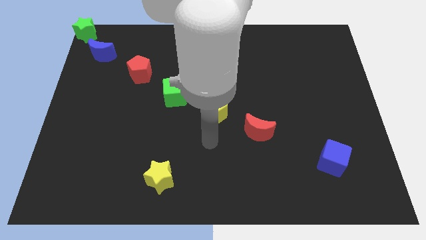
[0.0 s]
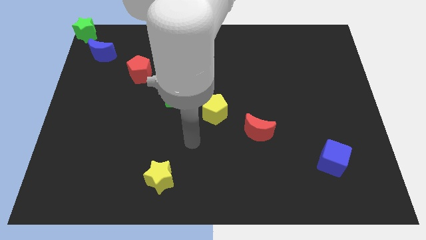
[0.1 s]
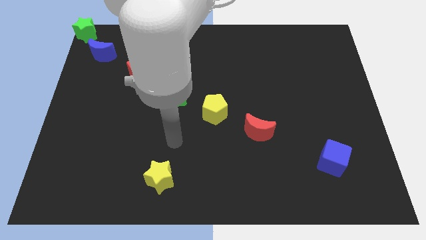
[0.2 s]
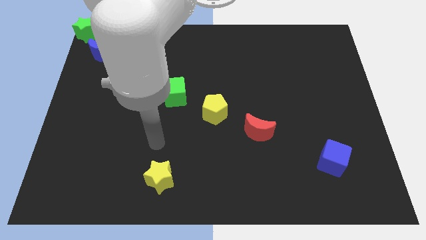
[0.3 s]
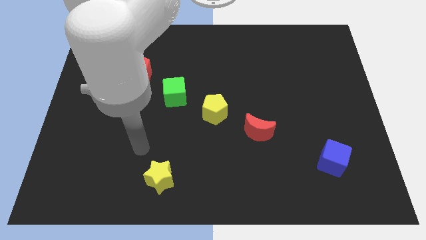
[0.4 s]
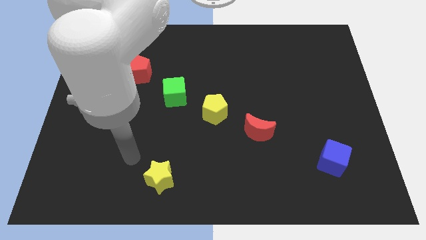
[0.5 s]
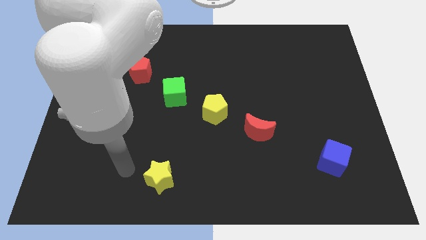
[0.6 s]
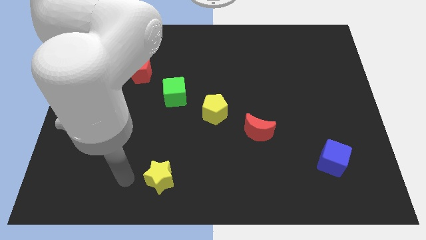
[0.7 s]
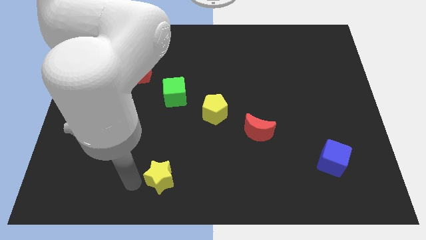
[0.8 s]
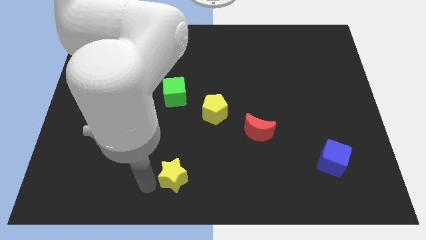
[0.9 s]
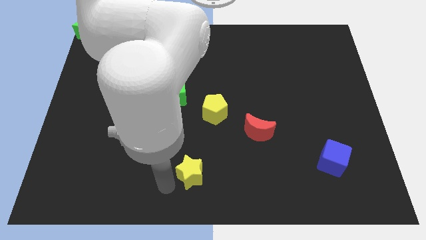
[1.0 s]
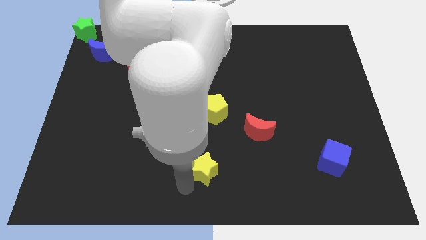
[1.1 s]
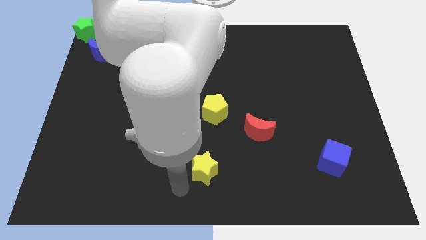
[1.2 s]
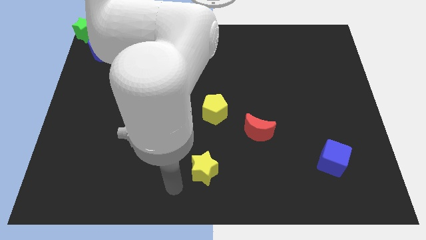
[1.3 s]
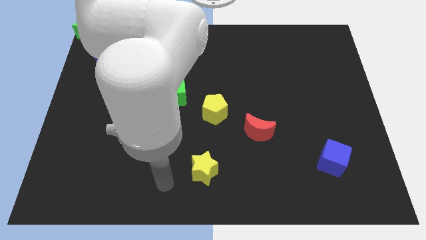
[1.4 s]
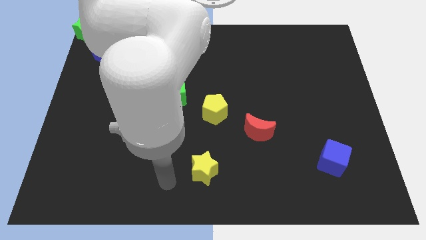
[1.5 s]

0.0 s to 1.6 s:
touch the bottom of yellow star

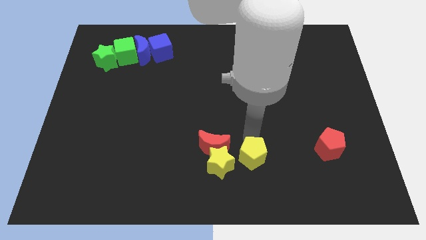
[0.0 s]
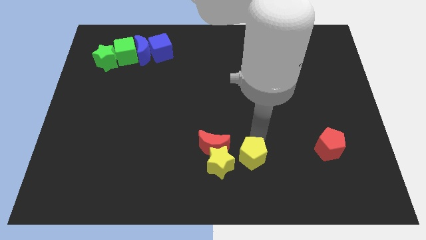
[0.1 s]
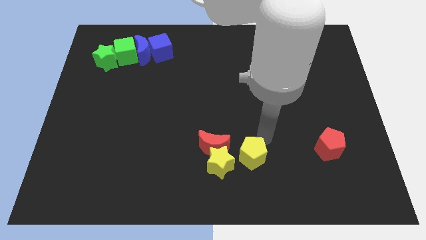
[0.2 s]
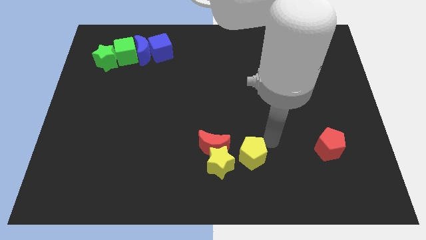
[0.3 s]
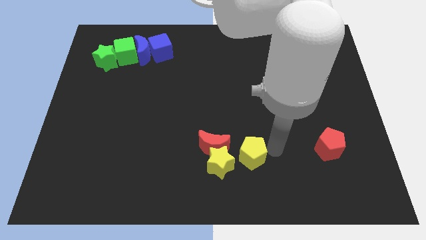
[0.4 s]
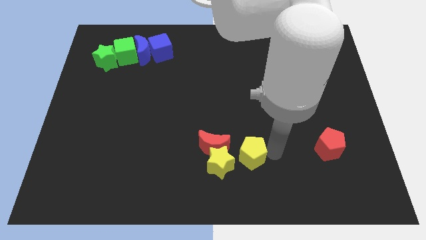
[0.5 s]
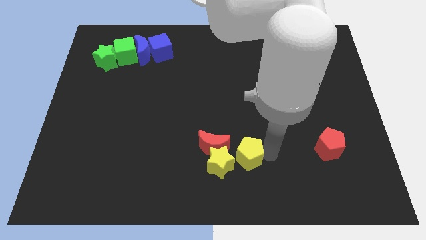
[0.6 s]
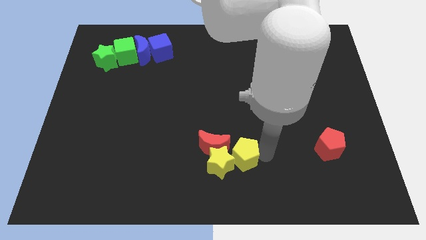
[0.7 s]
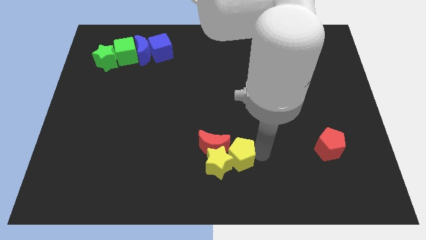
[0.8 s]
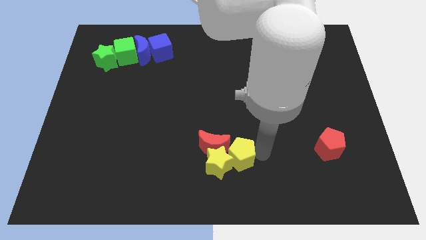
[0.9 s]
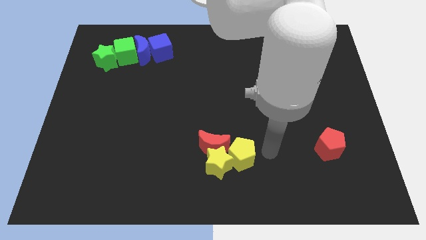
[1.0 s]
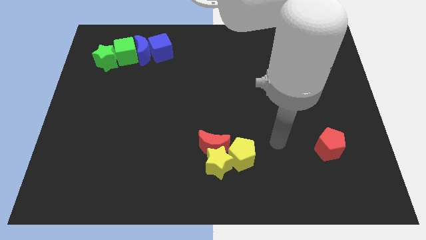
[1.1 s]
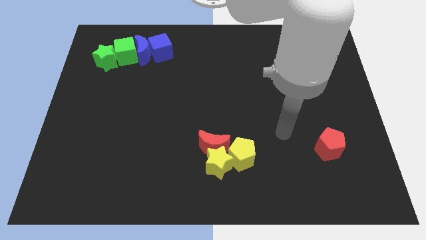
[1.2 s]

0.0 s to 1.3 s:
move the yellow pentagon into the yellow star

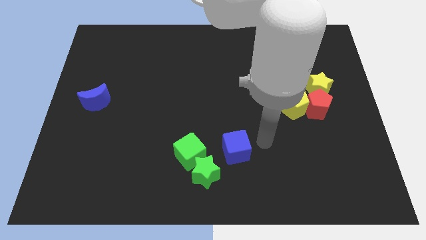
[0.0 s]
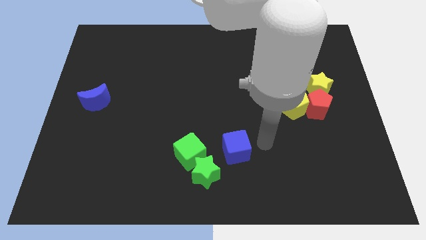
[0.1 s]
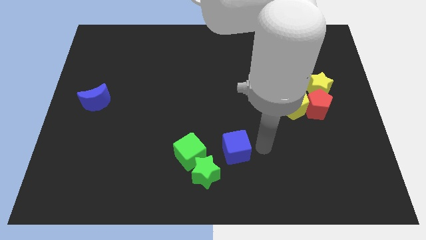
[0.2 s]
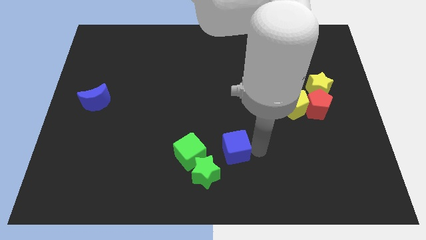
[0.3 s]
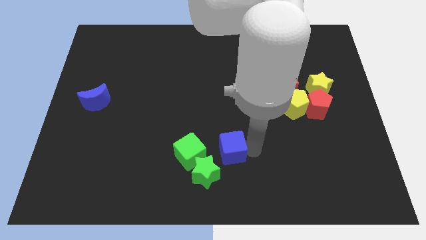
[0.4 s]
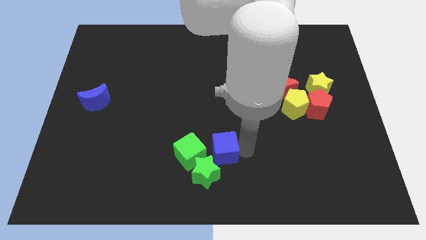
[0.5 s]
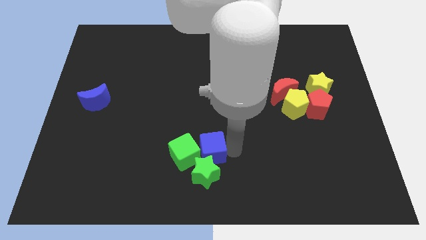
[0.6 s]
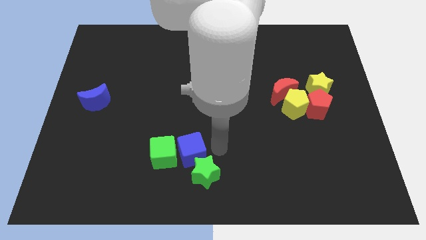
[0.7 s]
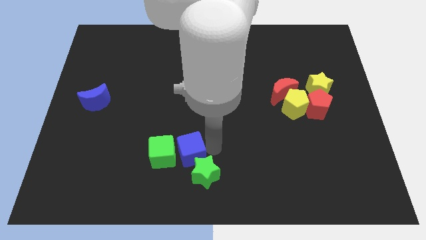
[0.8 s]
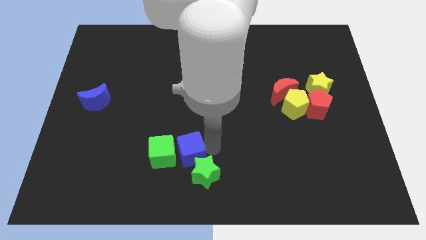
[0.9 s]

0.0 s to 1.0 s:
push blue cube into the green cube

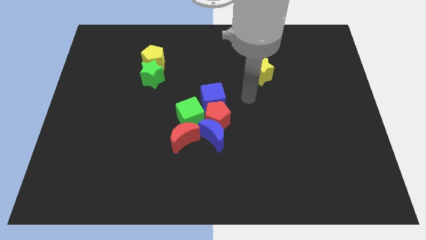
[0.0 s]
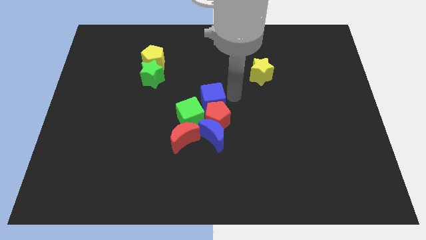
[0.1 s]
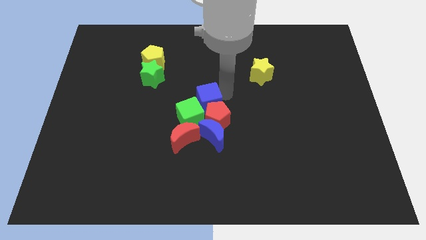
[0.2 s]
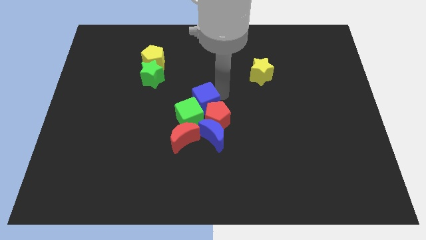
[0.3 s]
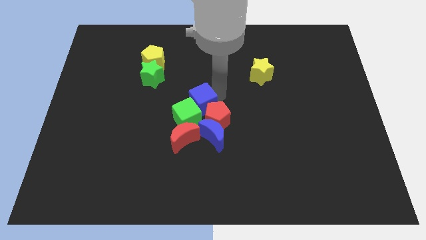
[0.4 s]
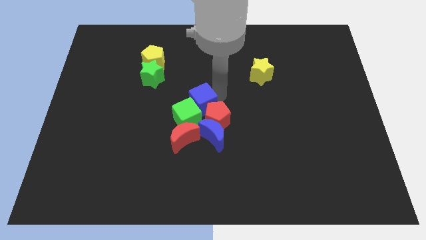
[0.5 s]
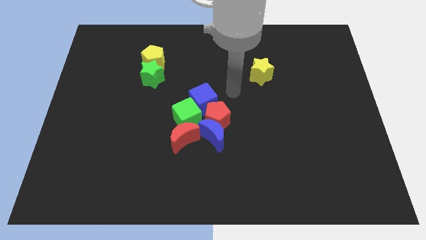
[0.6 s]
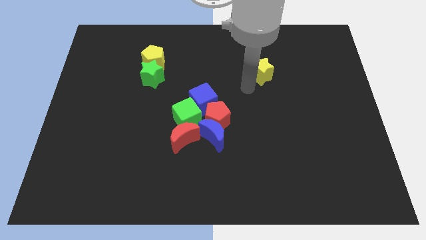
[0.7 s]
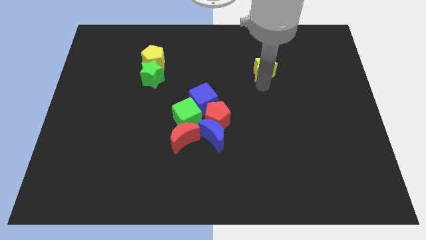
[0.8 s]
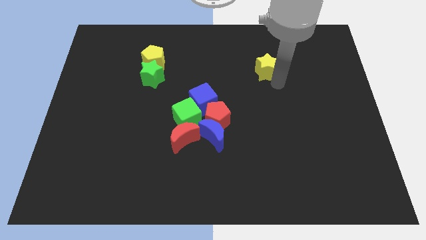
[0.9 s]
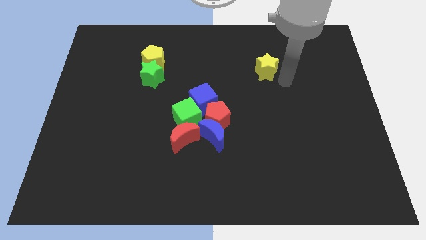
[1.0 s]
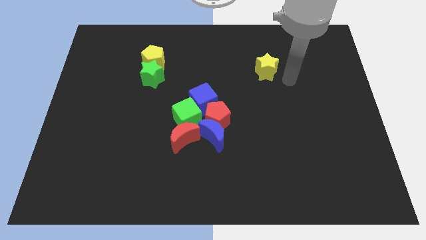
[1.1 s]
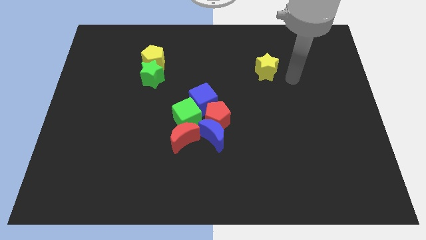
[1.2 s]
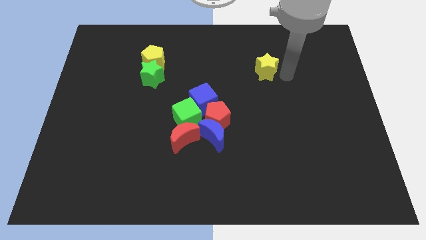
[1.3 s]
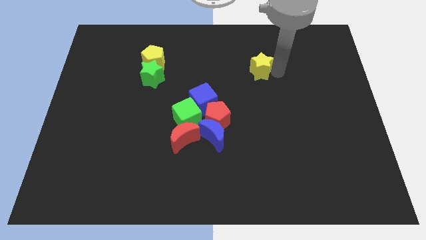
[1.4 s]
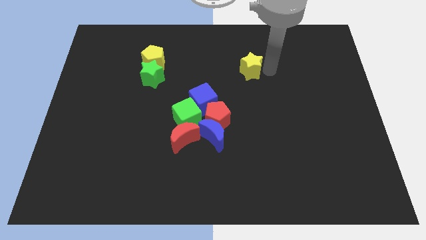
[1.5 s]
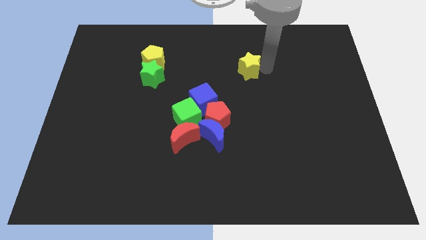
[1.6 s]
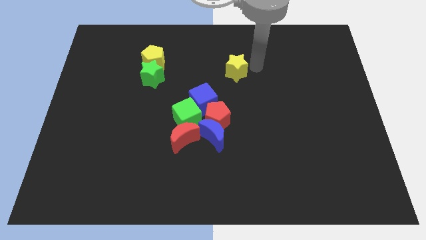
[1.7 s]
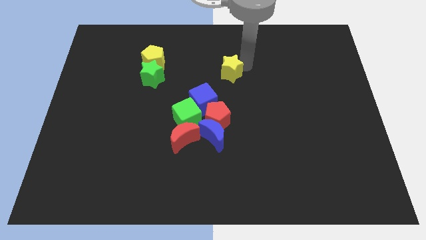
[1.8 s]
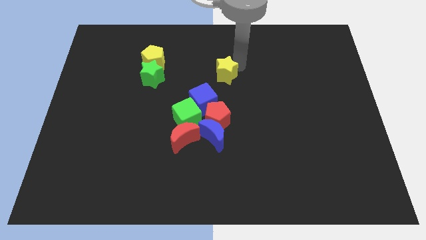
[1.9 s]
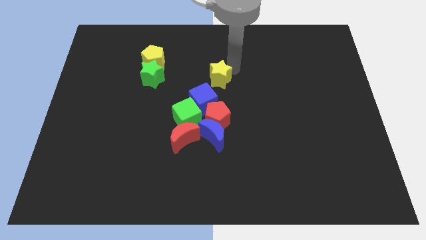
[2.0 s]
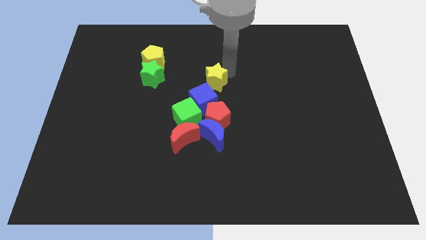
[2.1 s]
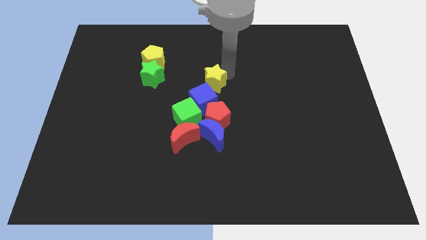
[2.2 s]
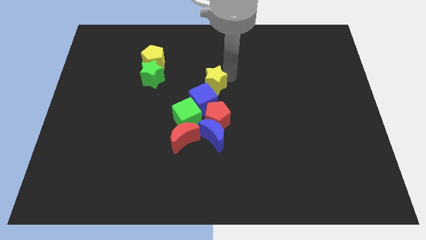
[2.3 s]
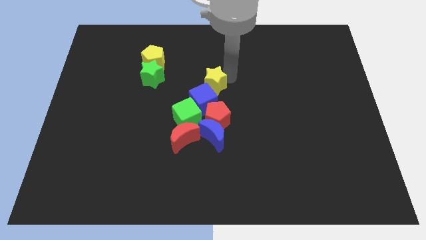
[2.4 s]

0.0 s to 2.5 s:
drag yellow star towards group of blocks

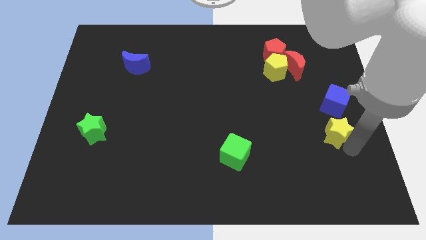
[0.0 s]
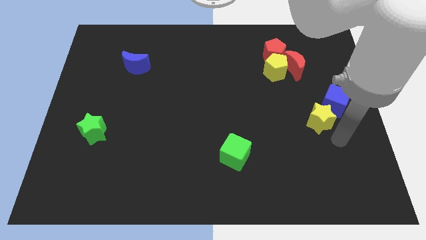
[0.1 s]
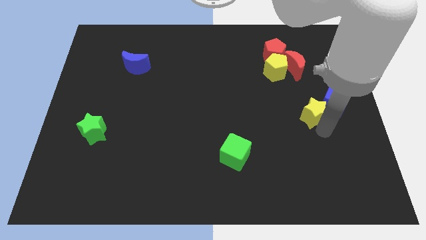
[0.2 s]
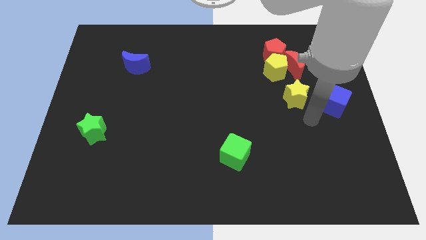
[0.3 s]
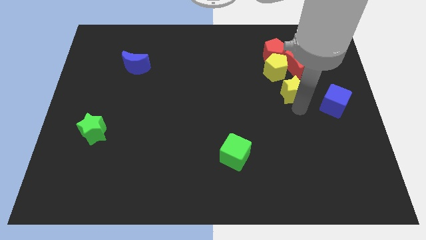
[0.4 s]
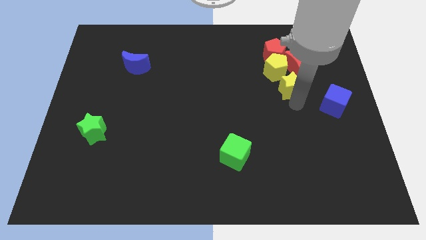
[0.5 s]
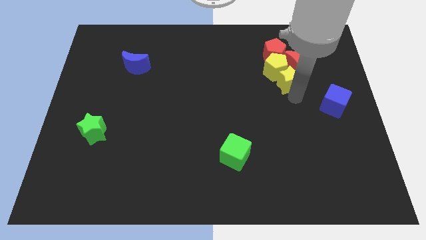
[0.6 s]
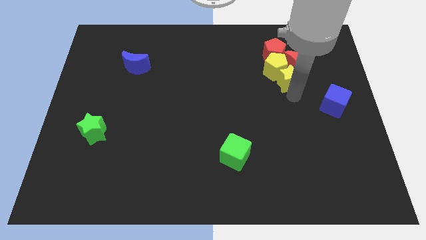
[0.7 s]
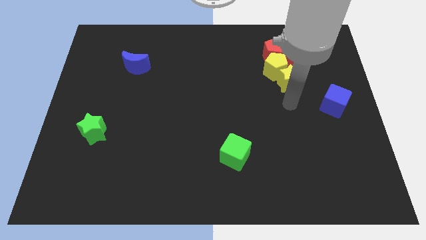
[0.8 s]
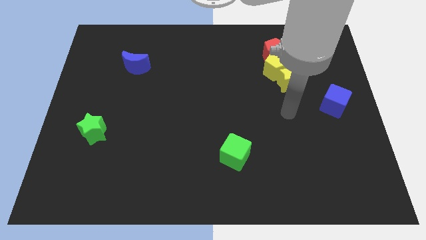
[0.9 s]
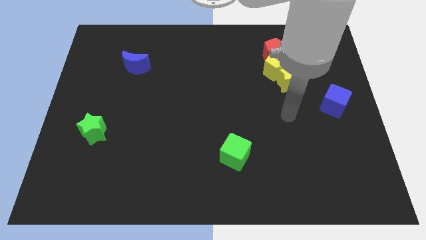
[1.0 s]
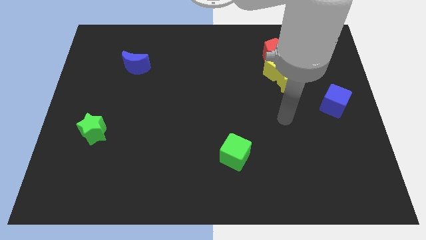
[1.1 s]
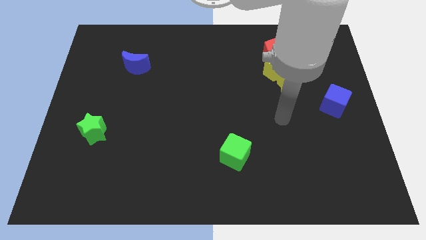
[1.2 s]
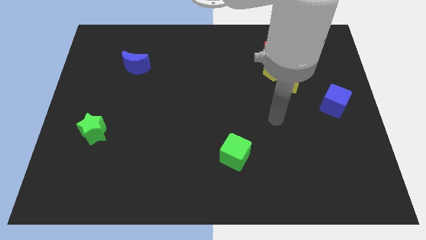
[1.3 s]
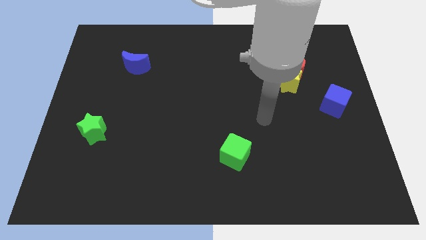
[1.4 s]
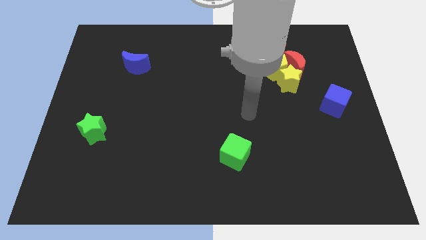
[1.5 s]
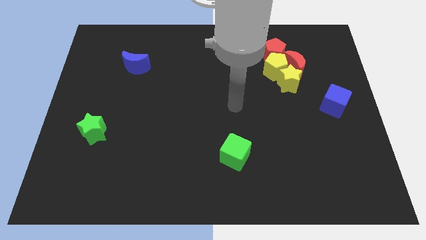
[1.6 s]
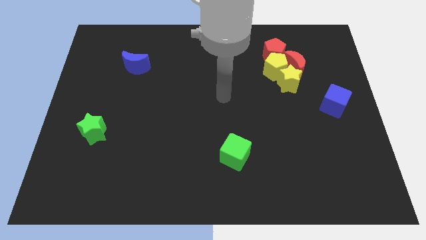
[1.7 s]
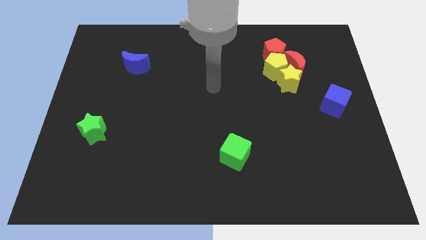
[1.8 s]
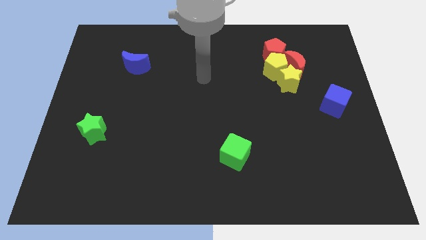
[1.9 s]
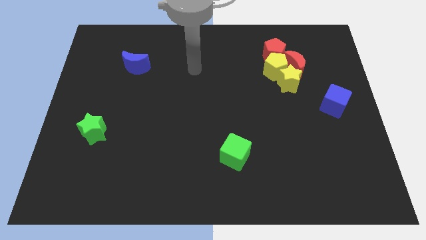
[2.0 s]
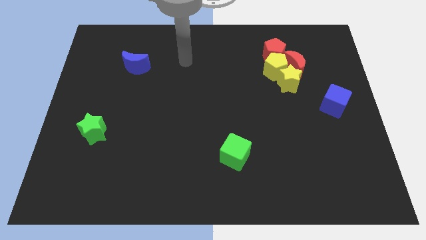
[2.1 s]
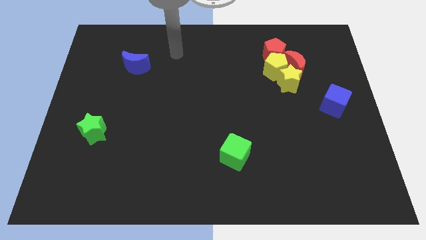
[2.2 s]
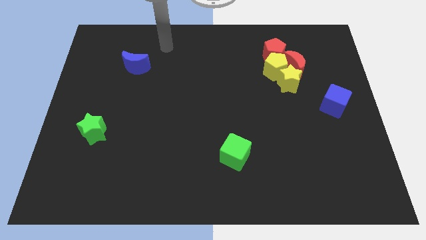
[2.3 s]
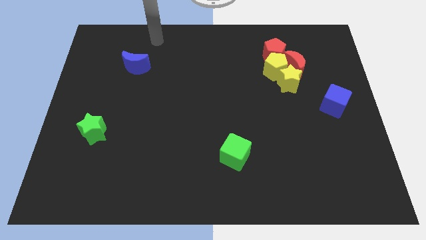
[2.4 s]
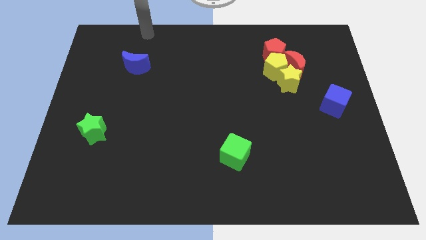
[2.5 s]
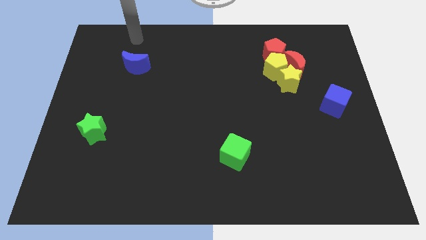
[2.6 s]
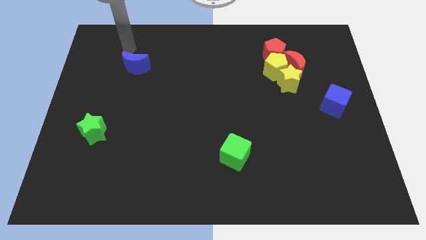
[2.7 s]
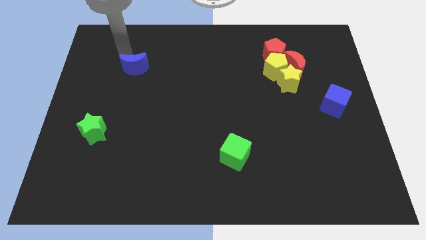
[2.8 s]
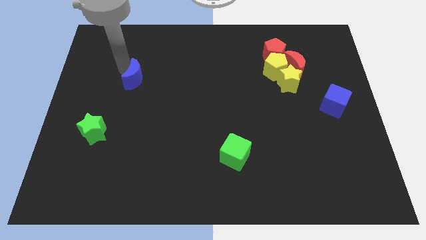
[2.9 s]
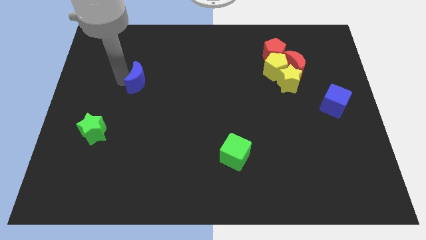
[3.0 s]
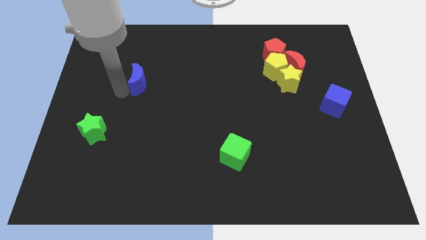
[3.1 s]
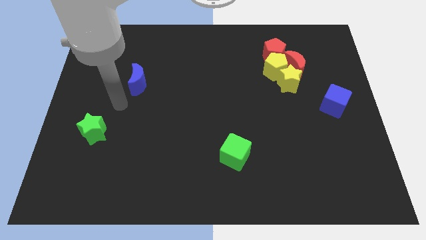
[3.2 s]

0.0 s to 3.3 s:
move the yellow star near to the yellow pentagonred pentagonred moon
